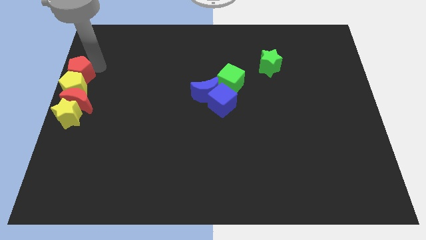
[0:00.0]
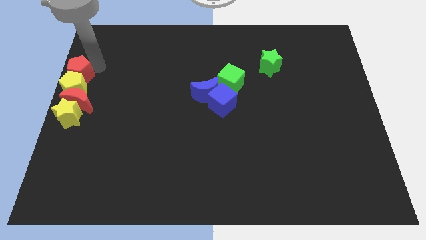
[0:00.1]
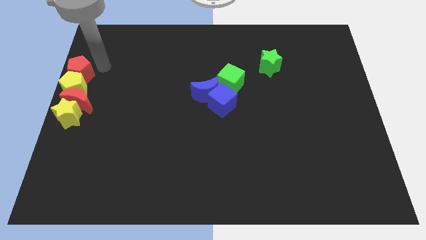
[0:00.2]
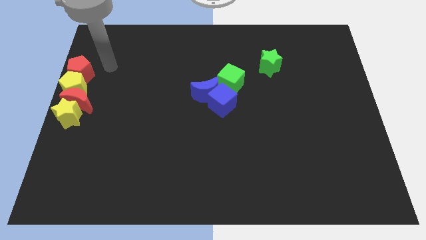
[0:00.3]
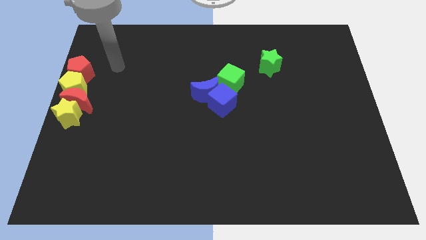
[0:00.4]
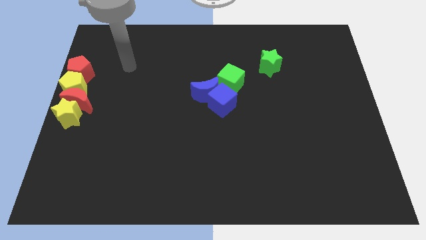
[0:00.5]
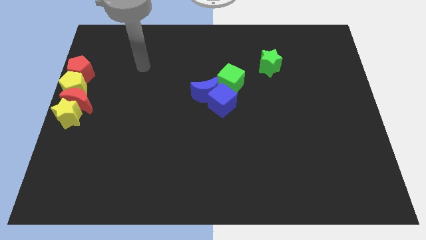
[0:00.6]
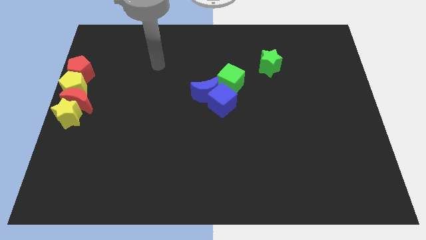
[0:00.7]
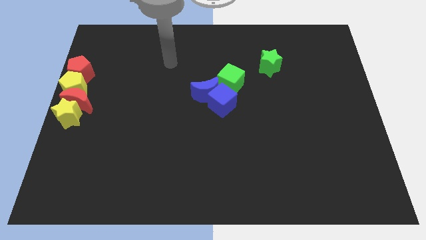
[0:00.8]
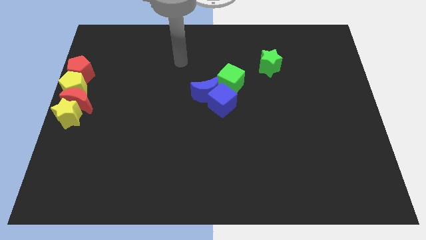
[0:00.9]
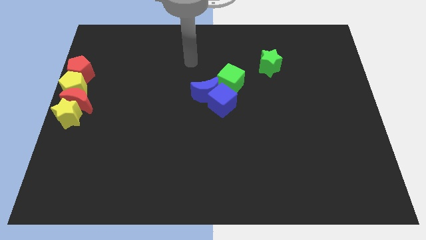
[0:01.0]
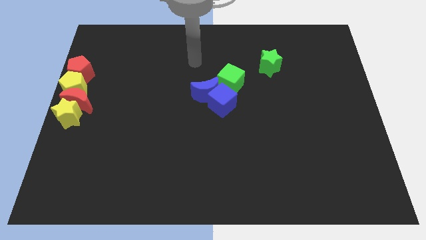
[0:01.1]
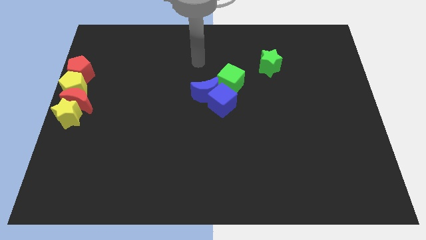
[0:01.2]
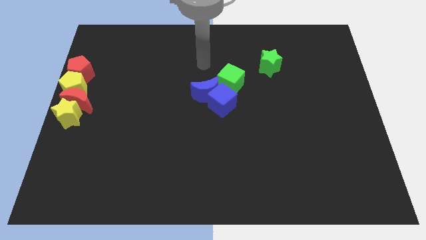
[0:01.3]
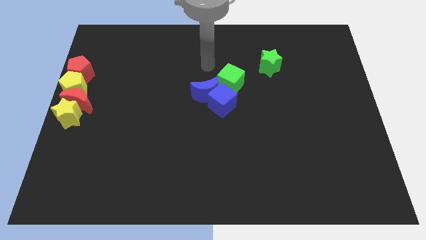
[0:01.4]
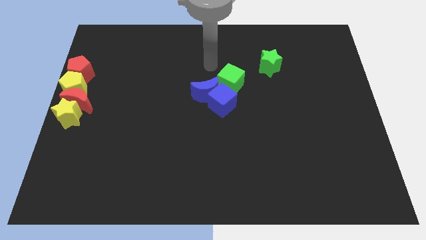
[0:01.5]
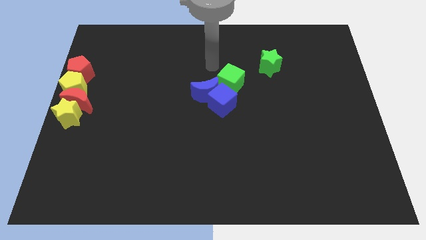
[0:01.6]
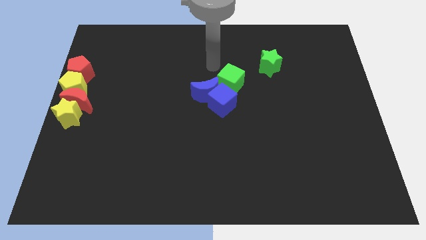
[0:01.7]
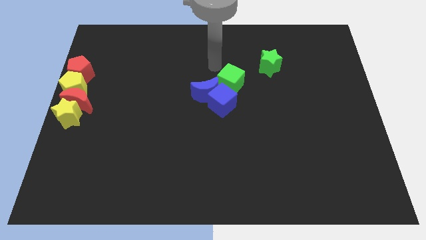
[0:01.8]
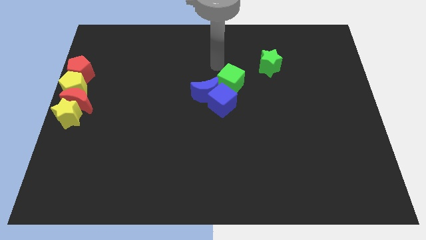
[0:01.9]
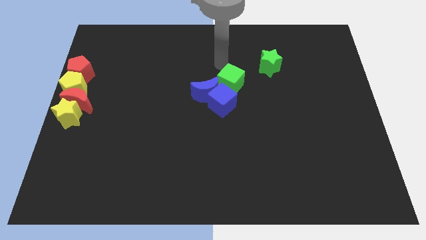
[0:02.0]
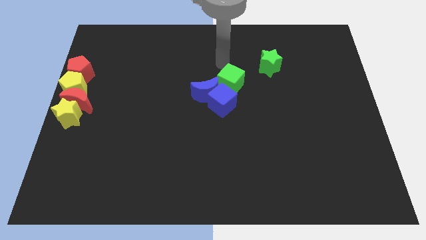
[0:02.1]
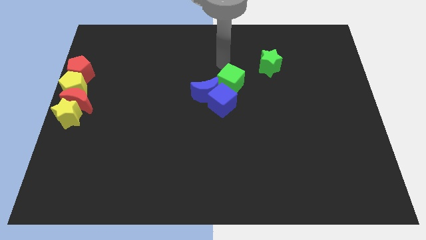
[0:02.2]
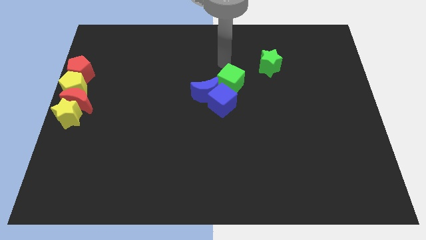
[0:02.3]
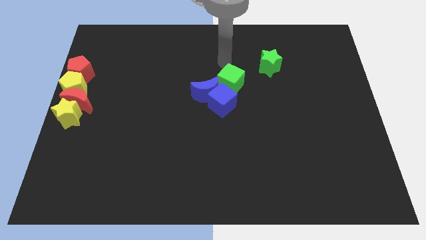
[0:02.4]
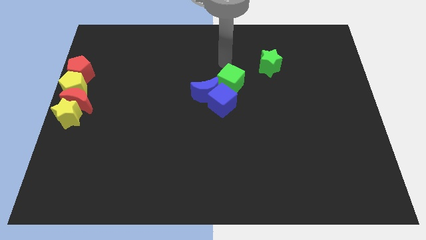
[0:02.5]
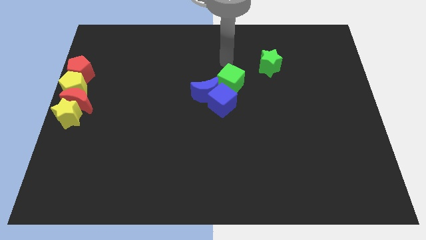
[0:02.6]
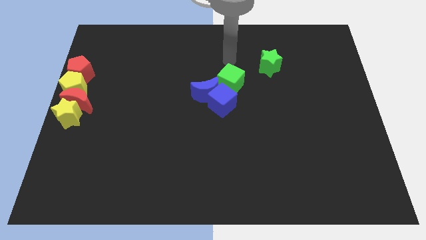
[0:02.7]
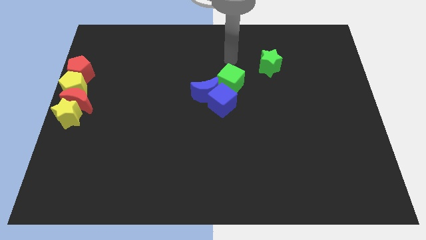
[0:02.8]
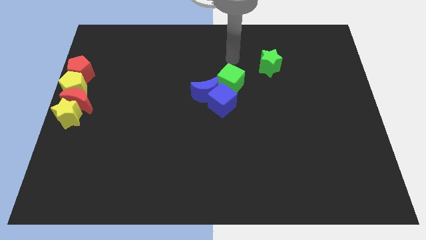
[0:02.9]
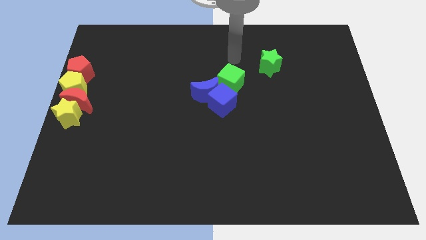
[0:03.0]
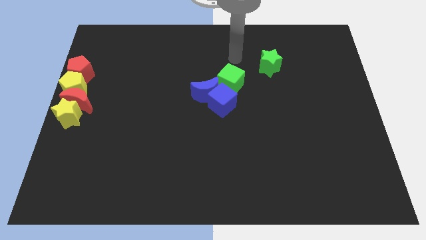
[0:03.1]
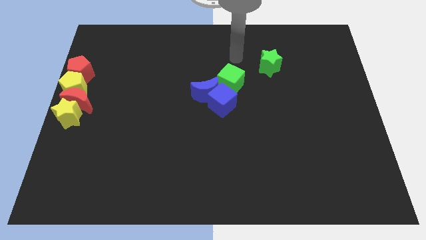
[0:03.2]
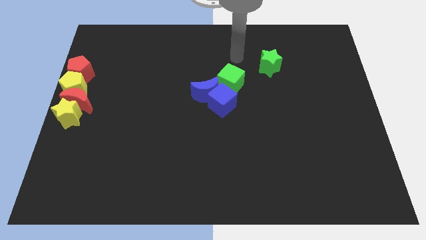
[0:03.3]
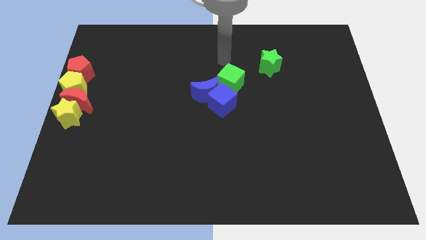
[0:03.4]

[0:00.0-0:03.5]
move the arm to the top of the green cube

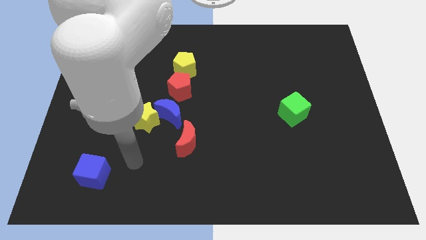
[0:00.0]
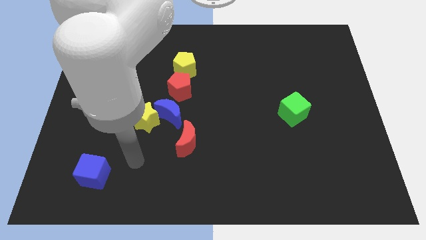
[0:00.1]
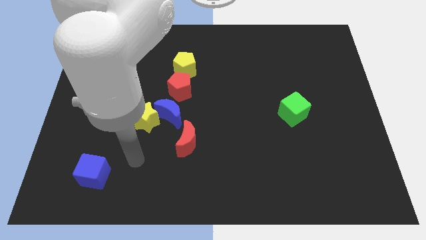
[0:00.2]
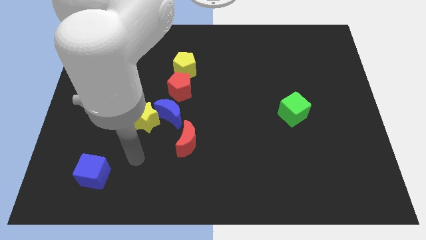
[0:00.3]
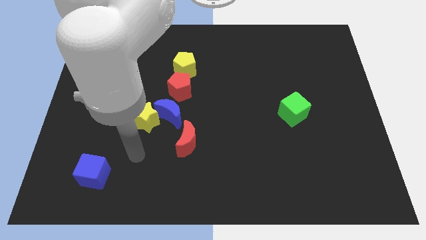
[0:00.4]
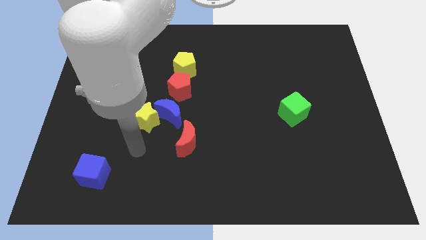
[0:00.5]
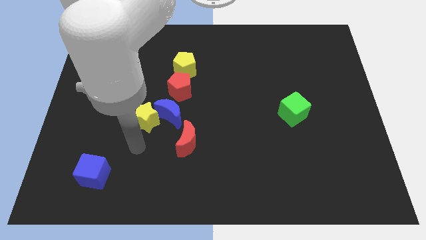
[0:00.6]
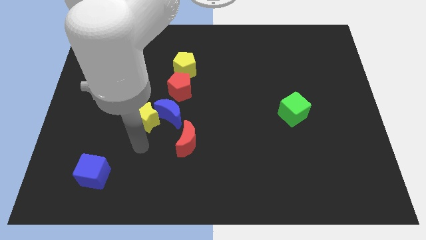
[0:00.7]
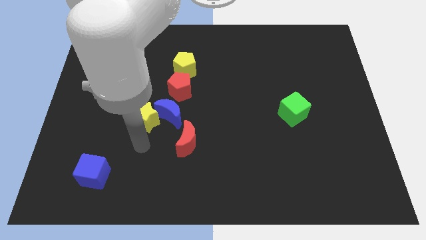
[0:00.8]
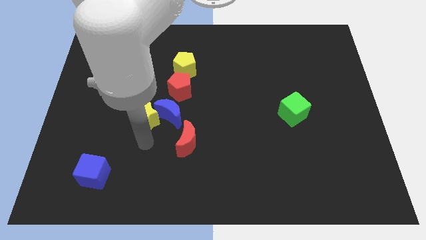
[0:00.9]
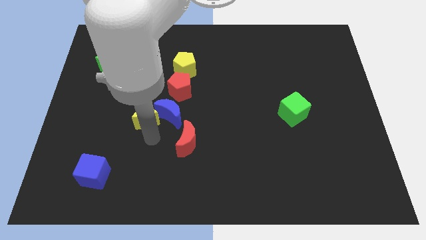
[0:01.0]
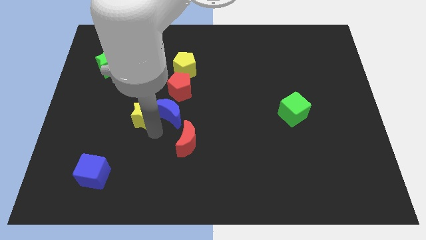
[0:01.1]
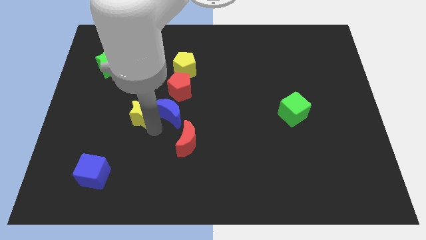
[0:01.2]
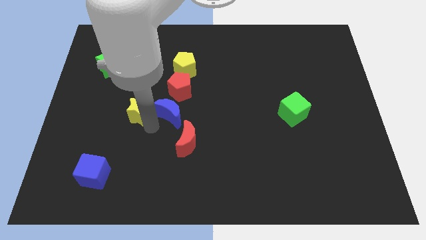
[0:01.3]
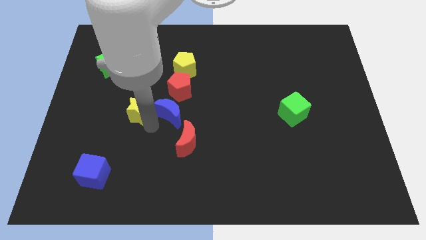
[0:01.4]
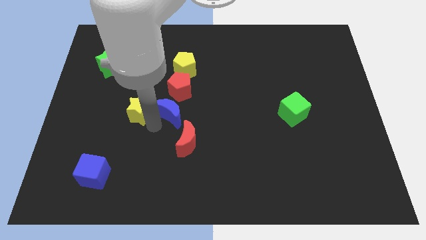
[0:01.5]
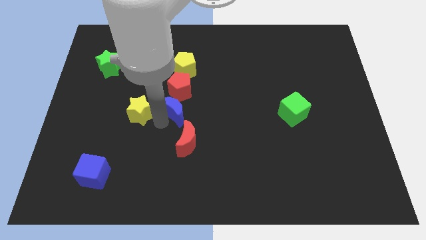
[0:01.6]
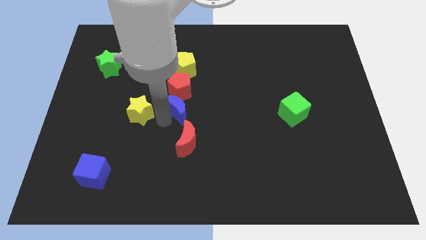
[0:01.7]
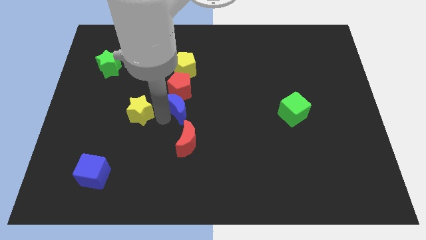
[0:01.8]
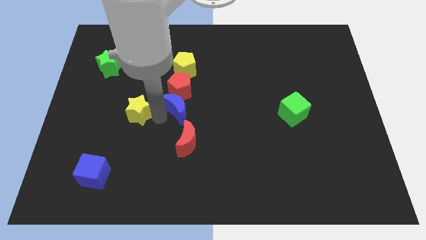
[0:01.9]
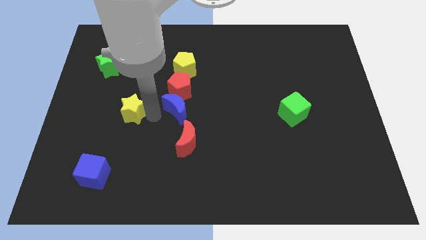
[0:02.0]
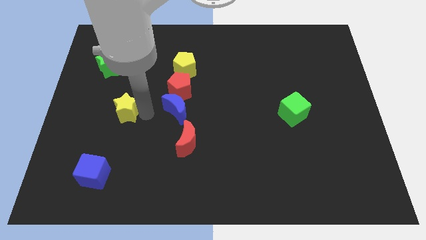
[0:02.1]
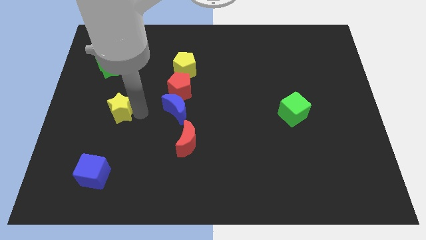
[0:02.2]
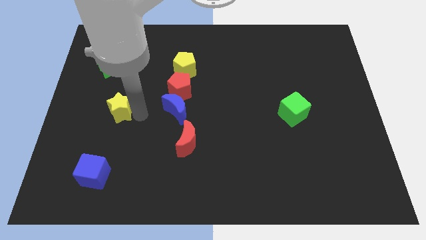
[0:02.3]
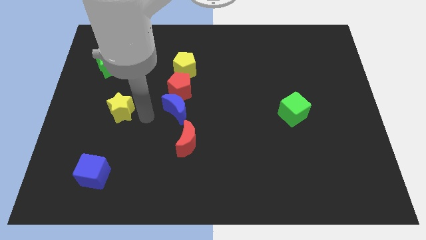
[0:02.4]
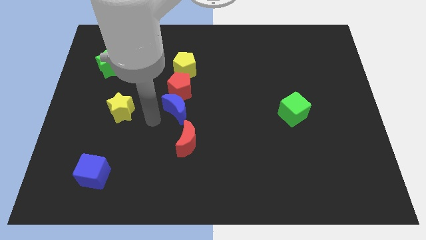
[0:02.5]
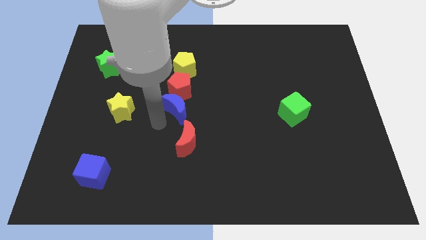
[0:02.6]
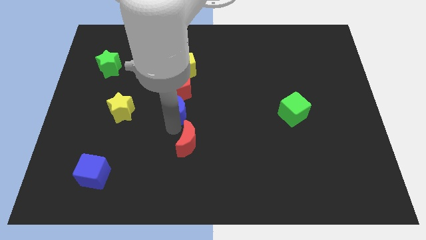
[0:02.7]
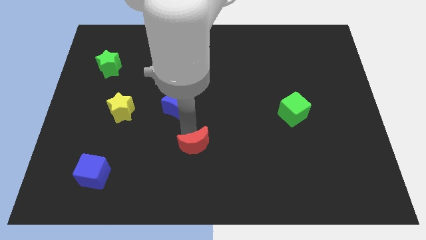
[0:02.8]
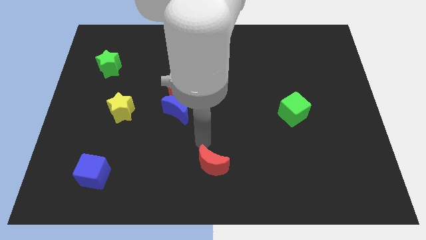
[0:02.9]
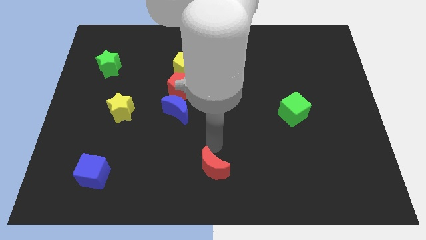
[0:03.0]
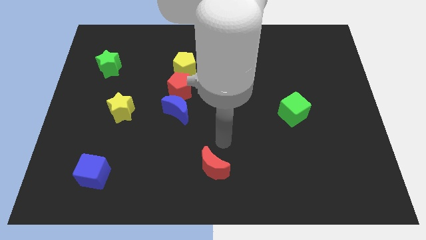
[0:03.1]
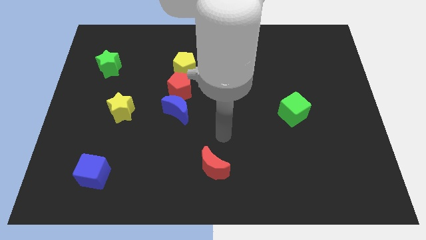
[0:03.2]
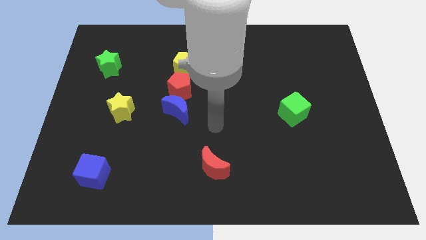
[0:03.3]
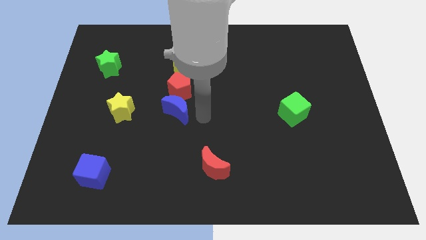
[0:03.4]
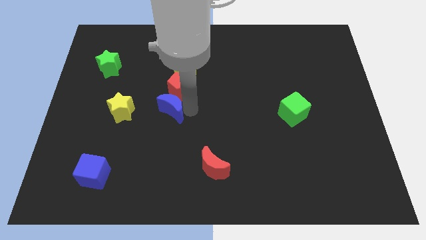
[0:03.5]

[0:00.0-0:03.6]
separate the yellow star and the blue moon

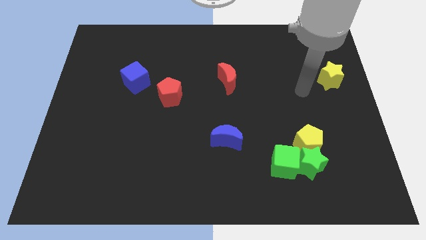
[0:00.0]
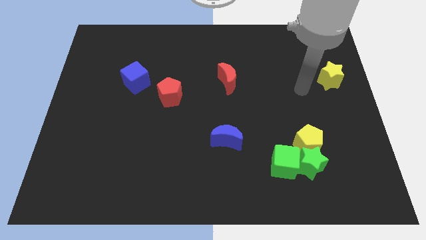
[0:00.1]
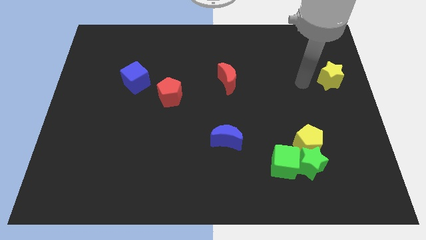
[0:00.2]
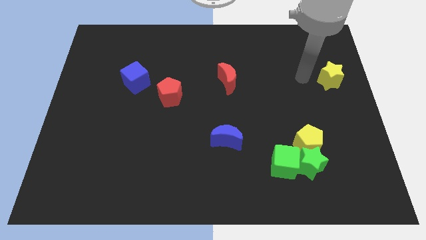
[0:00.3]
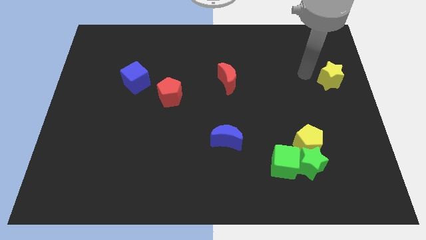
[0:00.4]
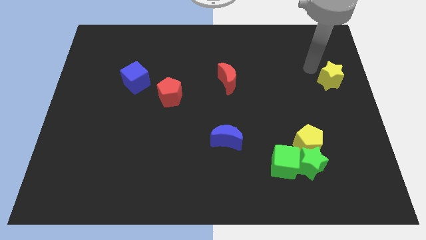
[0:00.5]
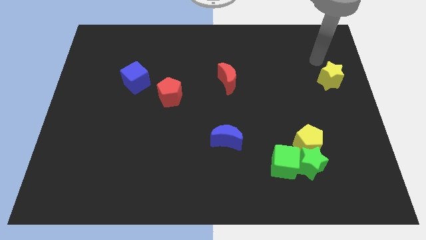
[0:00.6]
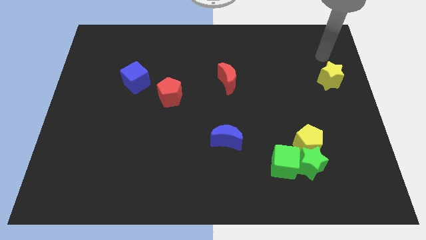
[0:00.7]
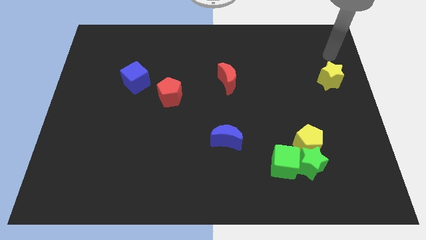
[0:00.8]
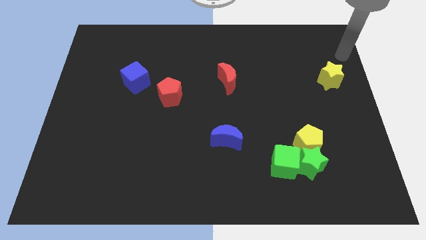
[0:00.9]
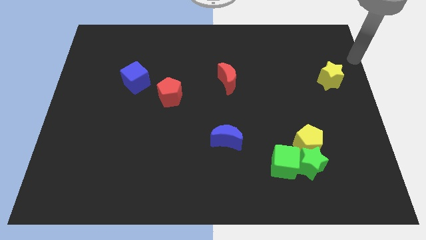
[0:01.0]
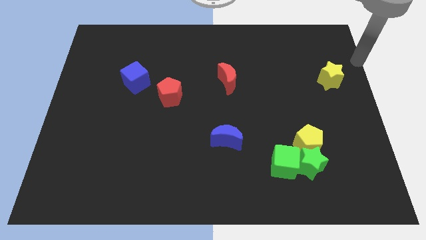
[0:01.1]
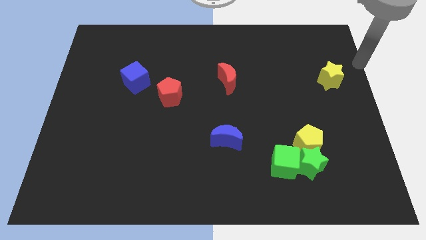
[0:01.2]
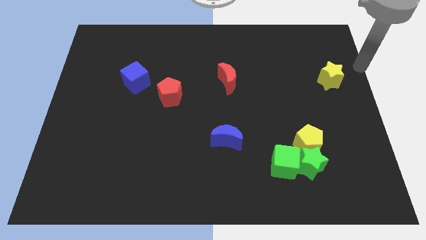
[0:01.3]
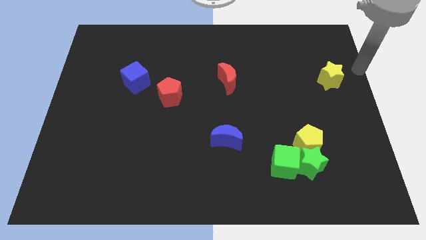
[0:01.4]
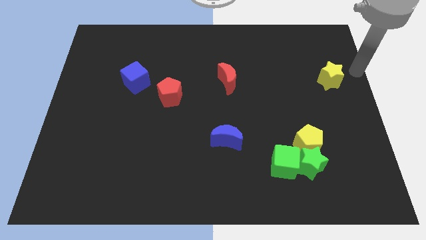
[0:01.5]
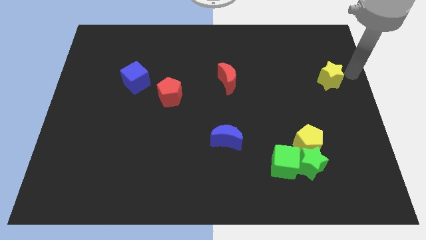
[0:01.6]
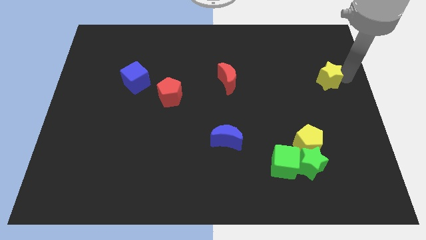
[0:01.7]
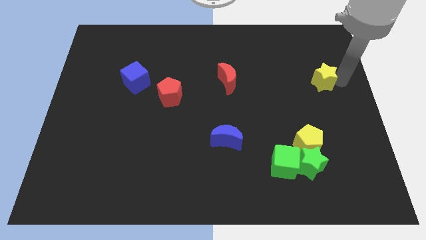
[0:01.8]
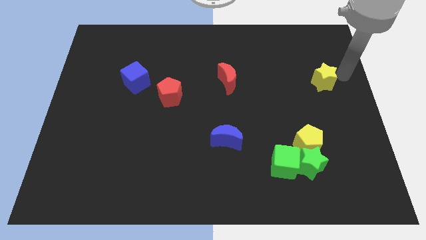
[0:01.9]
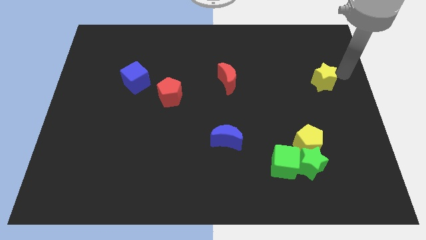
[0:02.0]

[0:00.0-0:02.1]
slide the yellow star slightly to the left
